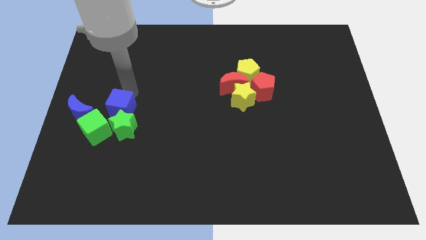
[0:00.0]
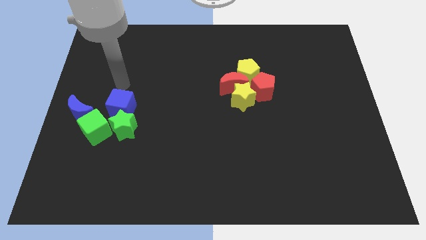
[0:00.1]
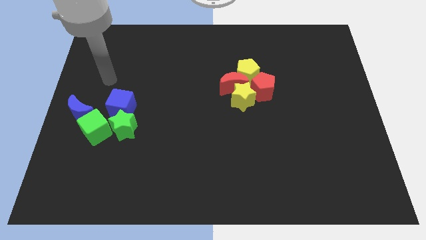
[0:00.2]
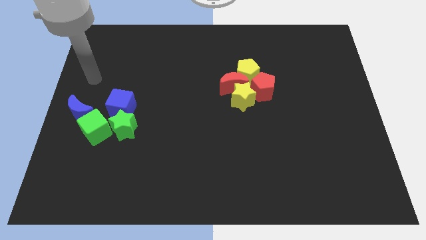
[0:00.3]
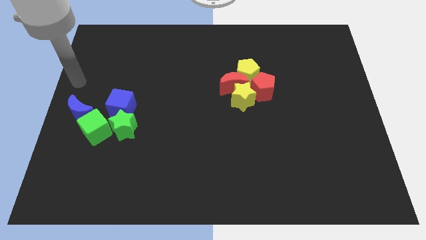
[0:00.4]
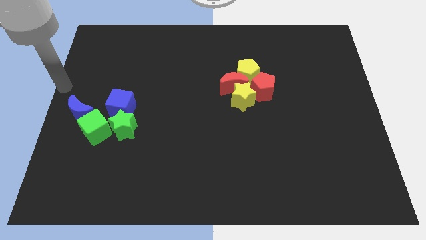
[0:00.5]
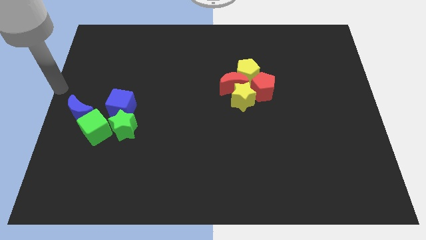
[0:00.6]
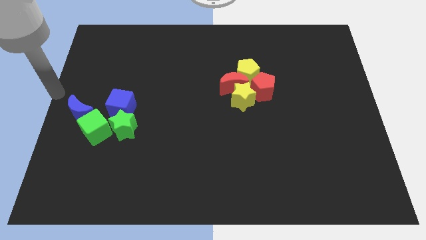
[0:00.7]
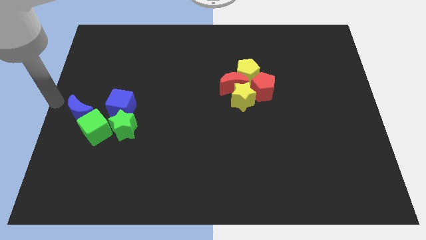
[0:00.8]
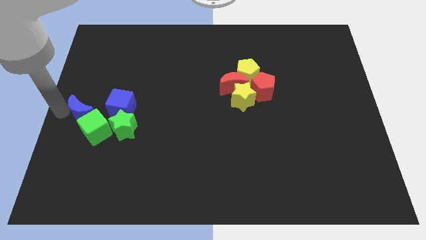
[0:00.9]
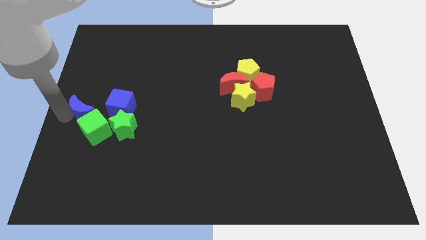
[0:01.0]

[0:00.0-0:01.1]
place your arm to the left of the blue crescent

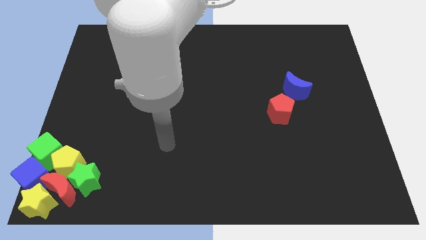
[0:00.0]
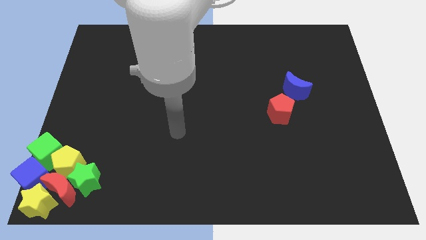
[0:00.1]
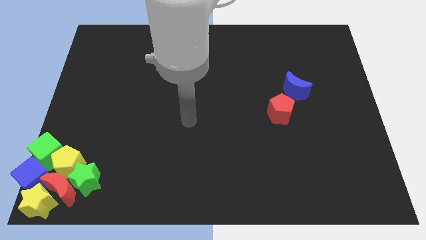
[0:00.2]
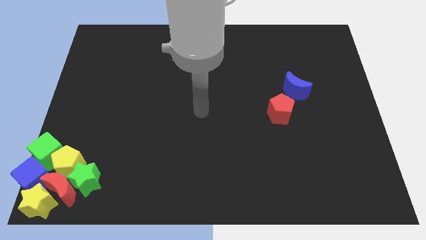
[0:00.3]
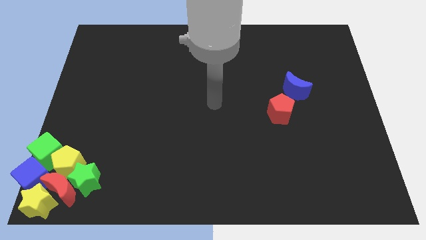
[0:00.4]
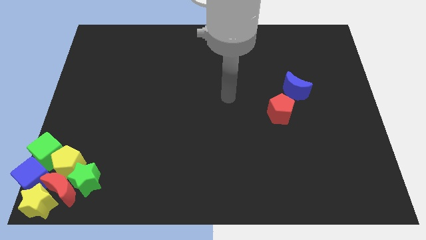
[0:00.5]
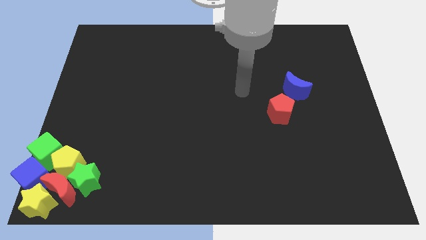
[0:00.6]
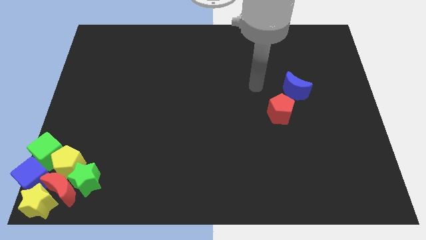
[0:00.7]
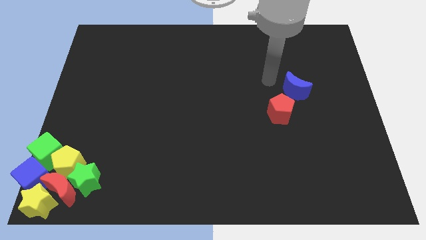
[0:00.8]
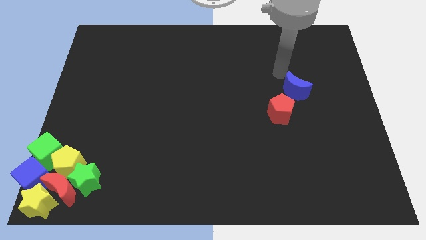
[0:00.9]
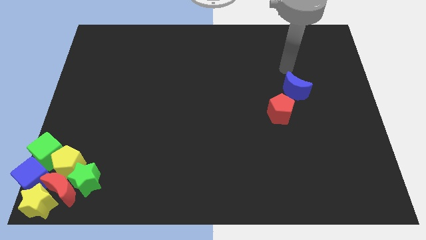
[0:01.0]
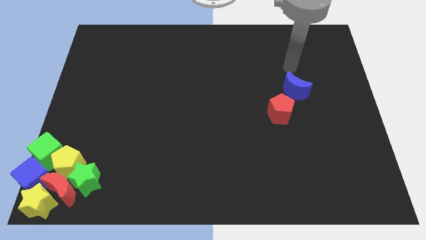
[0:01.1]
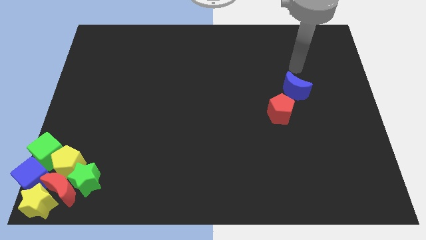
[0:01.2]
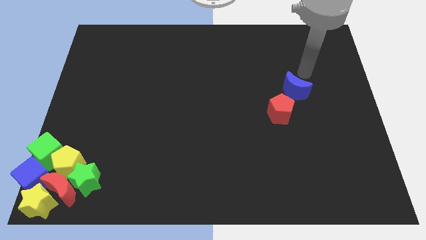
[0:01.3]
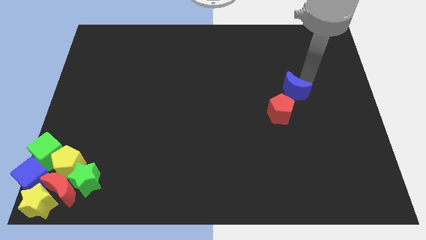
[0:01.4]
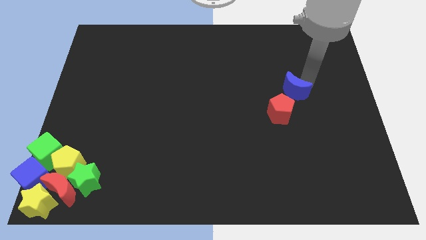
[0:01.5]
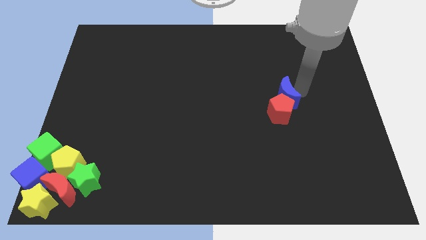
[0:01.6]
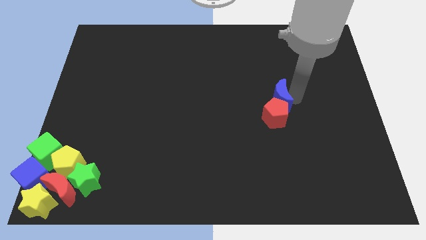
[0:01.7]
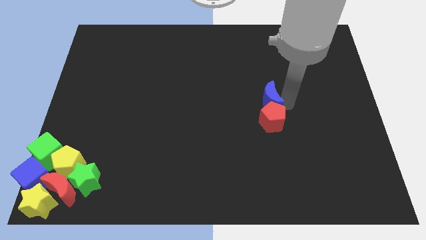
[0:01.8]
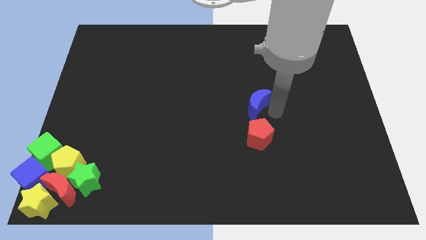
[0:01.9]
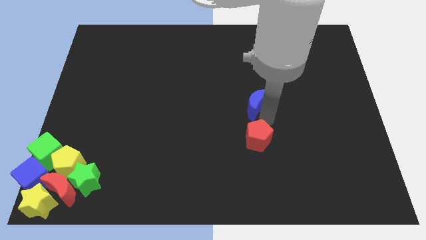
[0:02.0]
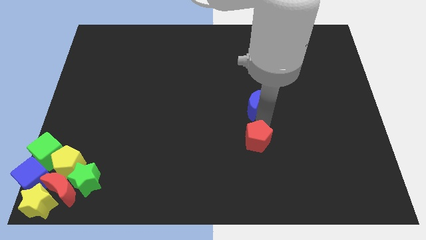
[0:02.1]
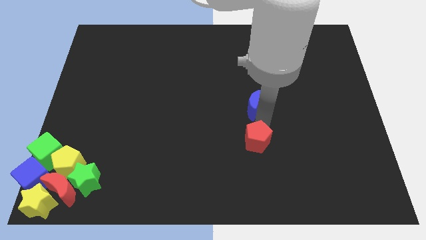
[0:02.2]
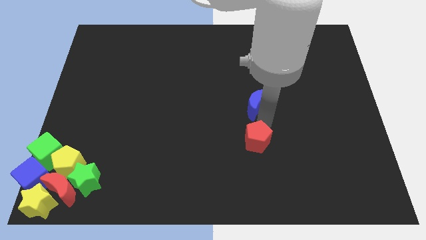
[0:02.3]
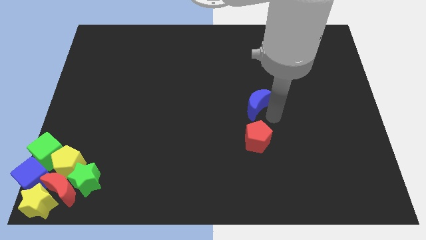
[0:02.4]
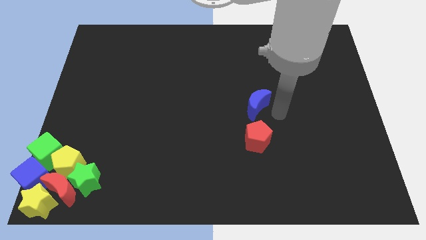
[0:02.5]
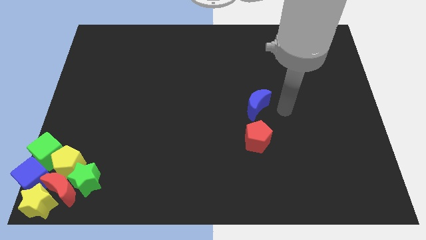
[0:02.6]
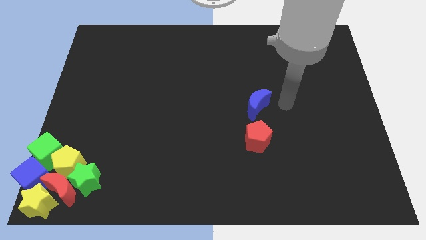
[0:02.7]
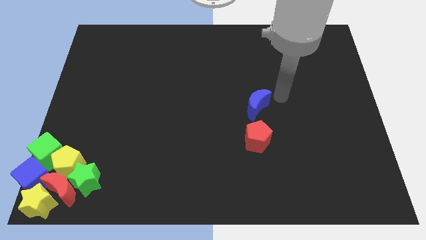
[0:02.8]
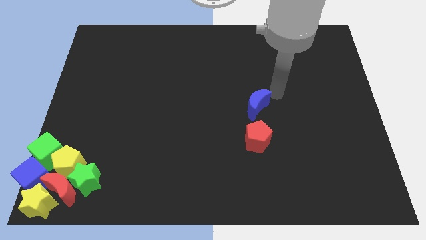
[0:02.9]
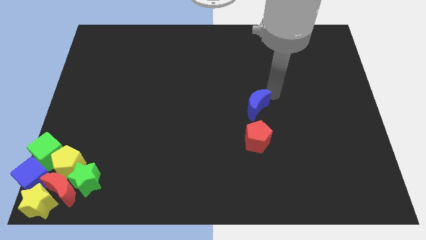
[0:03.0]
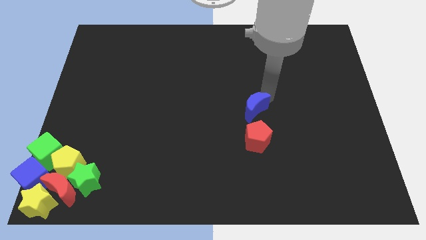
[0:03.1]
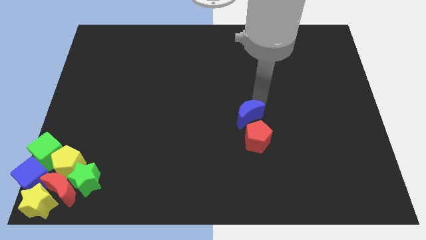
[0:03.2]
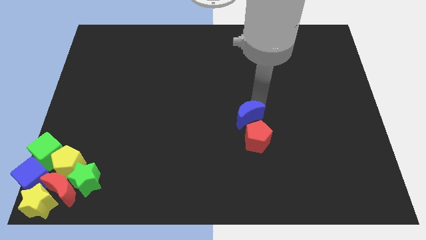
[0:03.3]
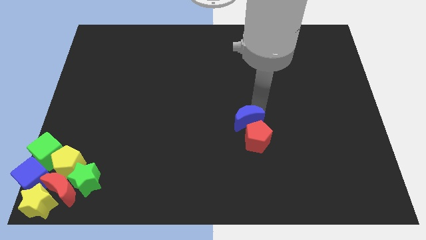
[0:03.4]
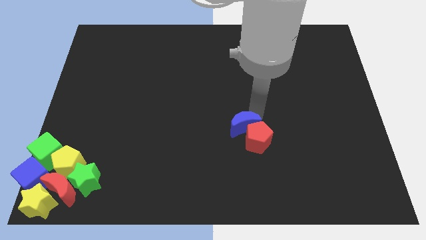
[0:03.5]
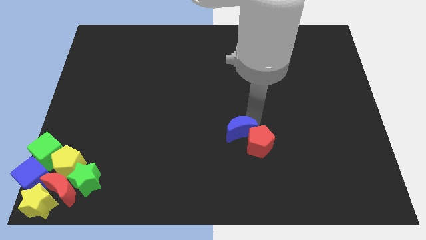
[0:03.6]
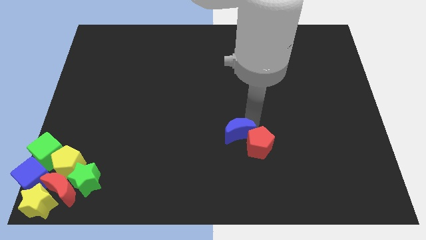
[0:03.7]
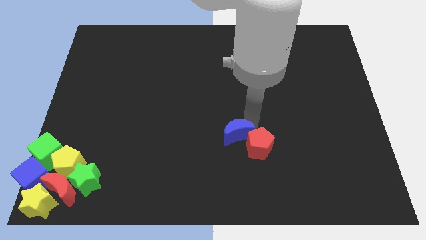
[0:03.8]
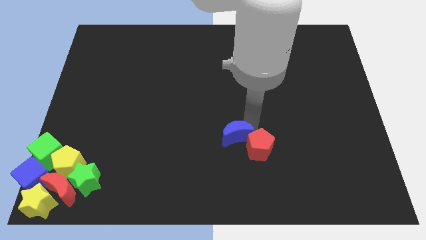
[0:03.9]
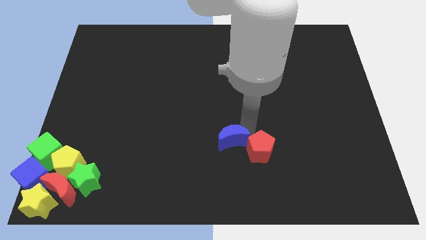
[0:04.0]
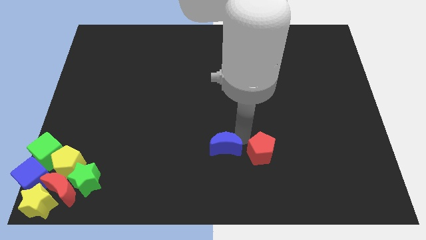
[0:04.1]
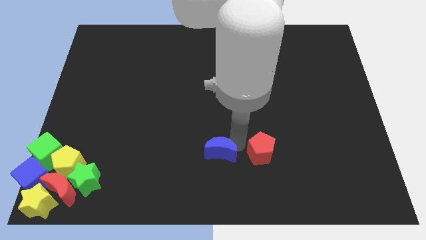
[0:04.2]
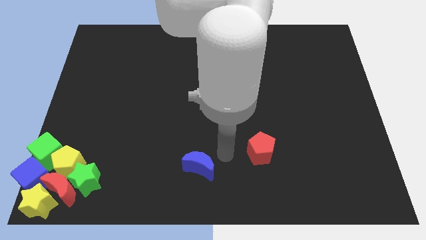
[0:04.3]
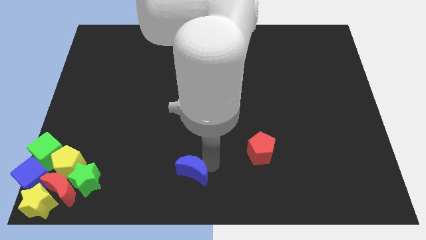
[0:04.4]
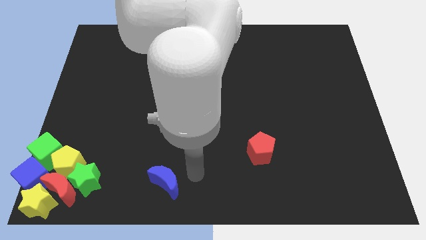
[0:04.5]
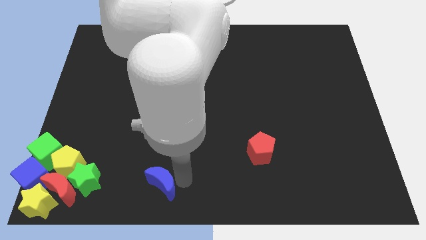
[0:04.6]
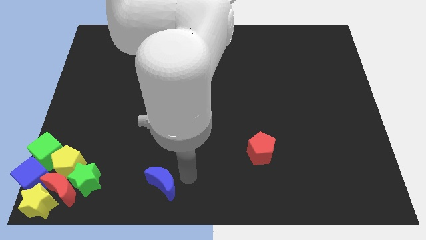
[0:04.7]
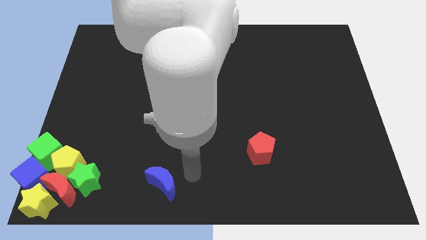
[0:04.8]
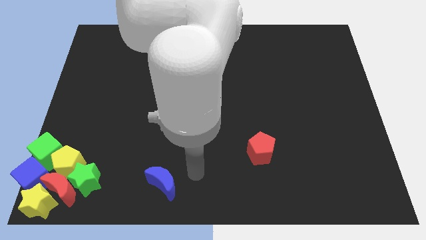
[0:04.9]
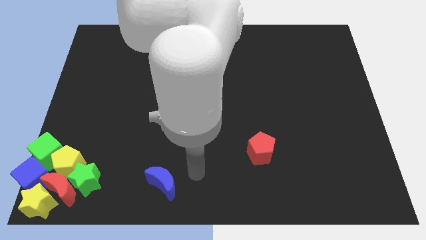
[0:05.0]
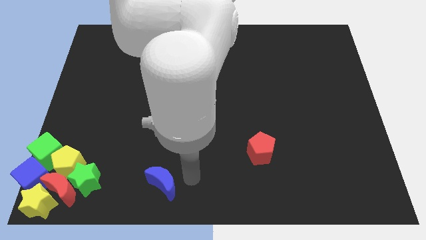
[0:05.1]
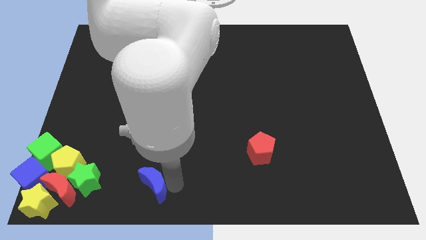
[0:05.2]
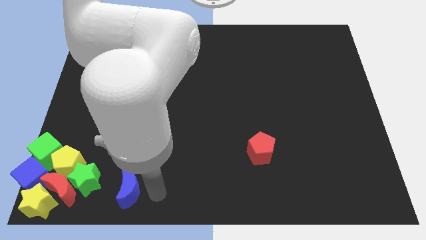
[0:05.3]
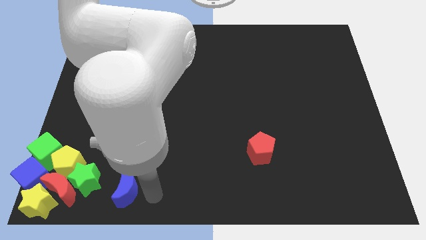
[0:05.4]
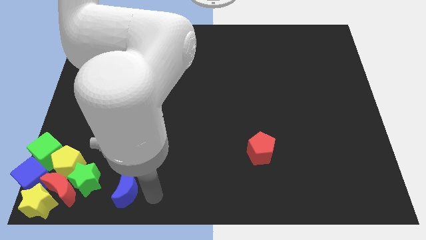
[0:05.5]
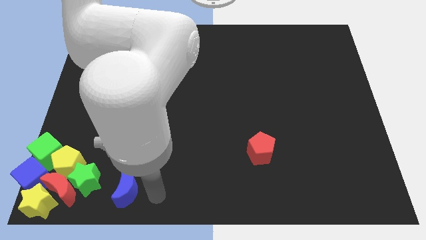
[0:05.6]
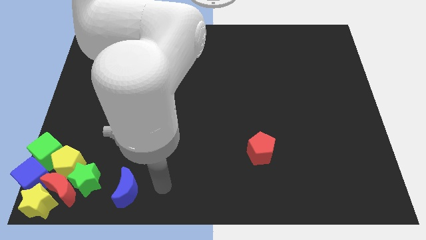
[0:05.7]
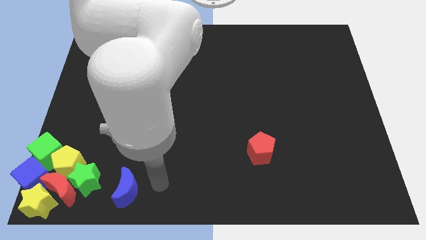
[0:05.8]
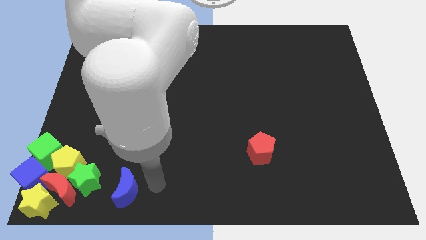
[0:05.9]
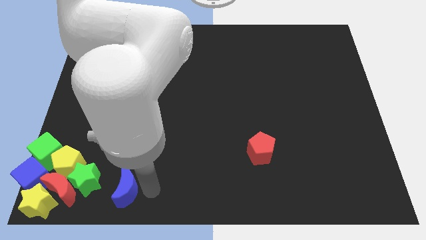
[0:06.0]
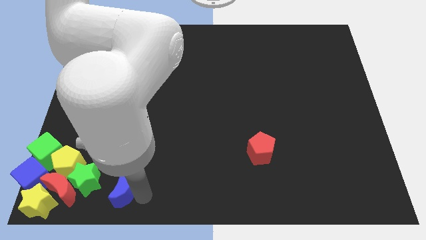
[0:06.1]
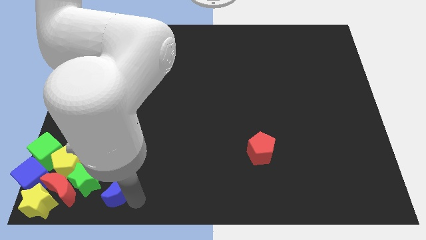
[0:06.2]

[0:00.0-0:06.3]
move the blue crescent closer to the green star

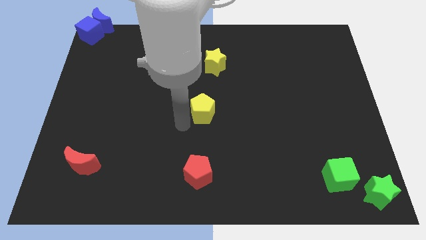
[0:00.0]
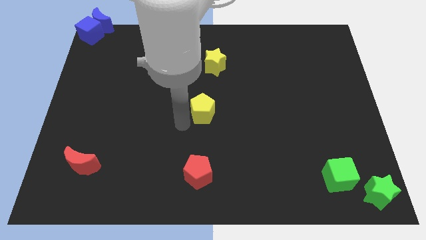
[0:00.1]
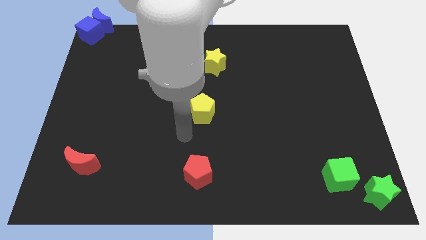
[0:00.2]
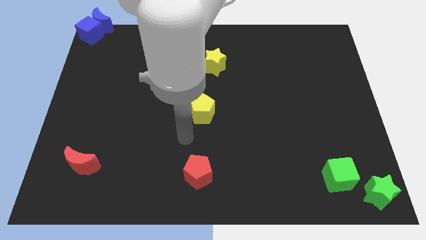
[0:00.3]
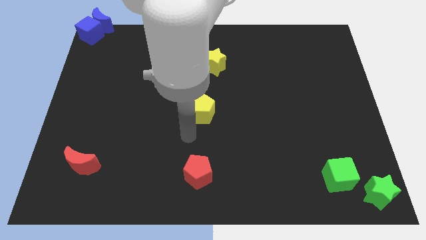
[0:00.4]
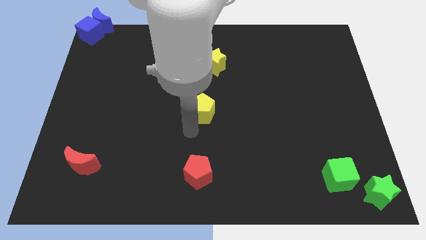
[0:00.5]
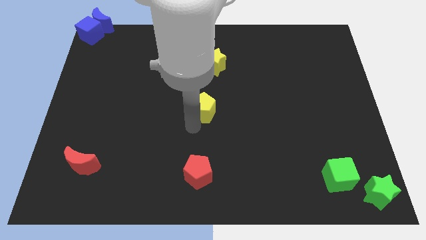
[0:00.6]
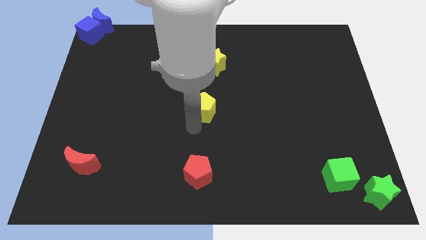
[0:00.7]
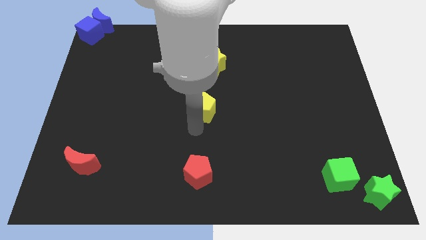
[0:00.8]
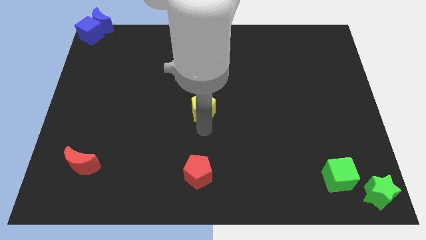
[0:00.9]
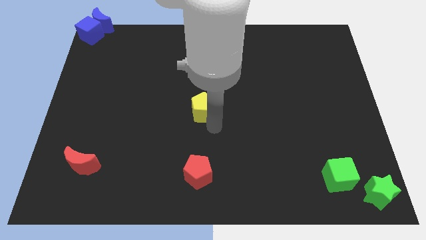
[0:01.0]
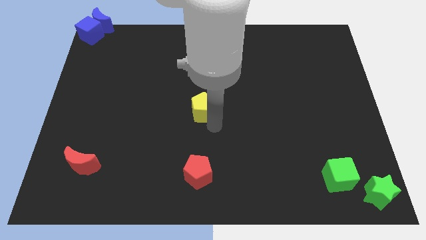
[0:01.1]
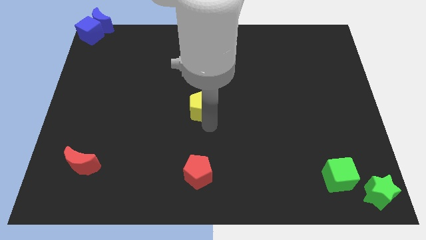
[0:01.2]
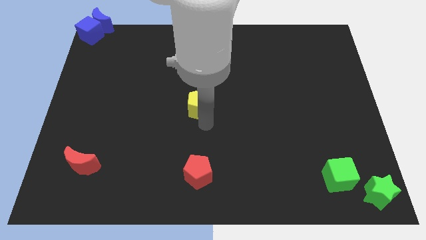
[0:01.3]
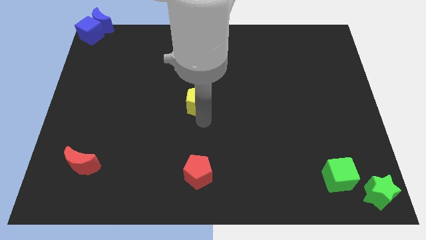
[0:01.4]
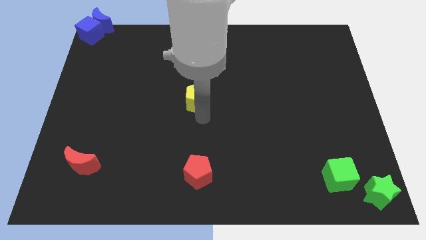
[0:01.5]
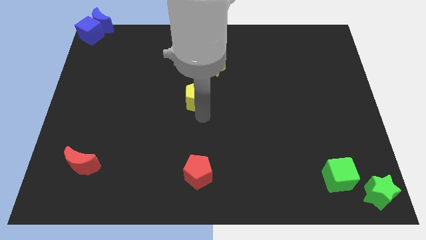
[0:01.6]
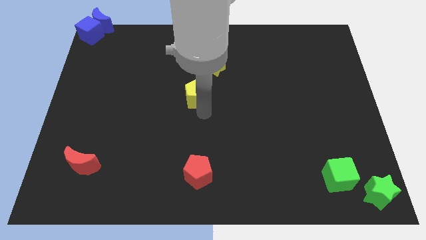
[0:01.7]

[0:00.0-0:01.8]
push the yellow pentagon towards the center of the board
